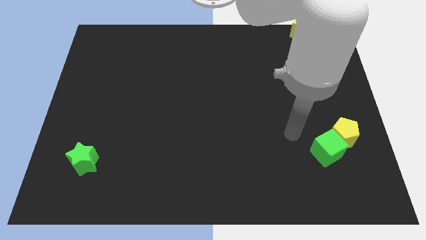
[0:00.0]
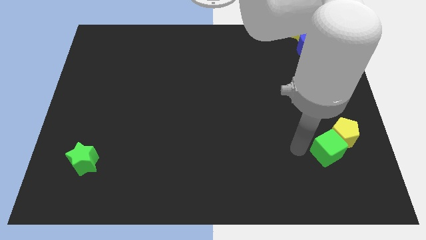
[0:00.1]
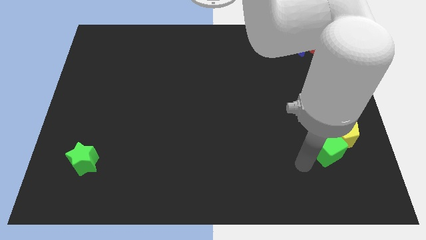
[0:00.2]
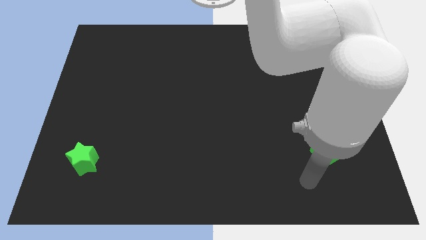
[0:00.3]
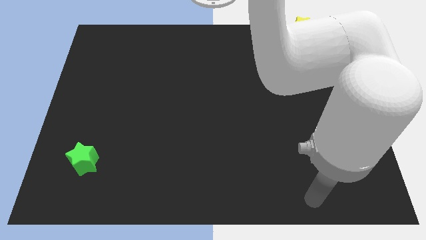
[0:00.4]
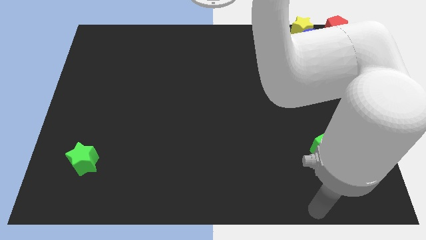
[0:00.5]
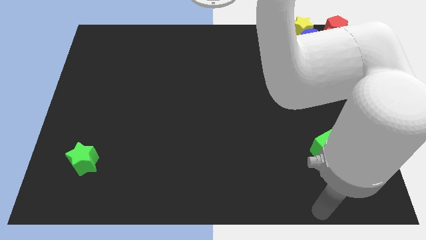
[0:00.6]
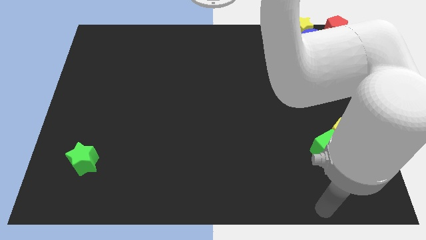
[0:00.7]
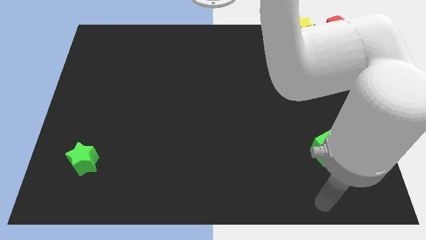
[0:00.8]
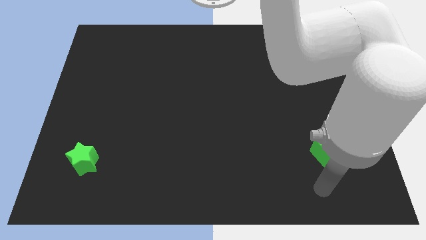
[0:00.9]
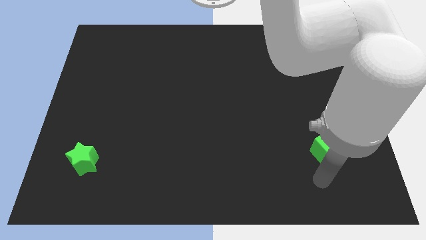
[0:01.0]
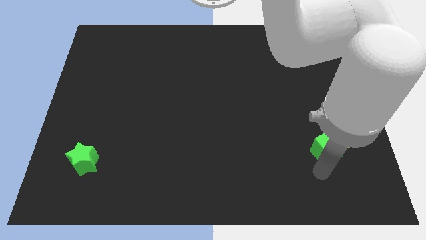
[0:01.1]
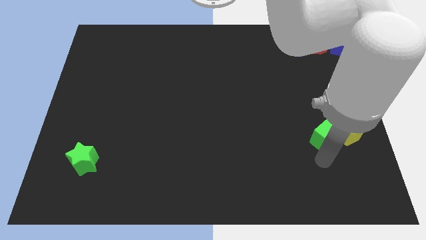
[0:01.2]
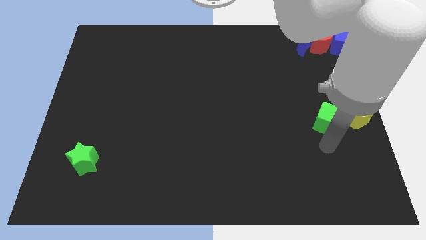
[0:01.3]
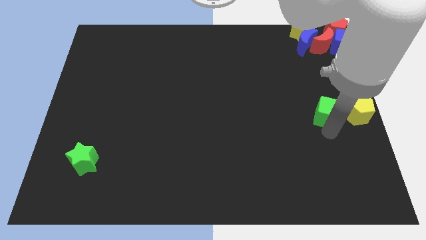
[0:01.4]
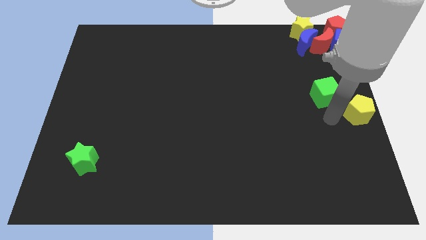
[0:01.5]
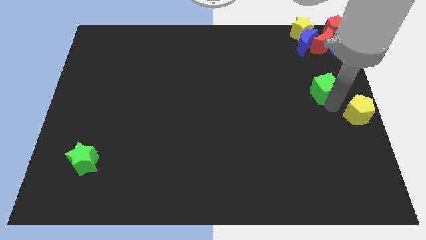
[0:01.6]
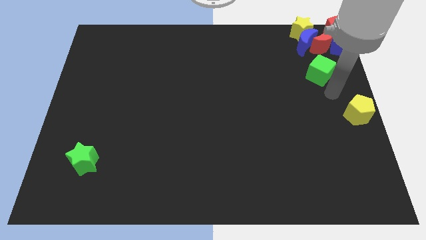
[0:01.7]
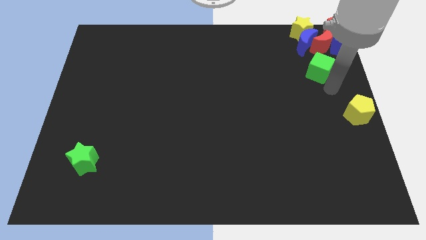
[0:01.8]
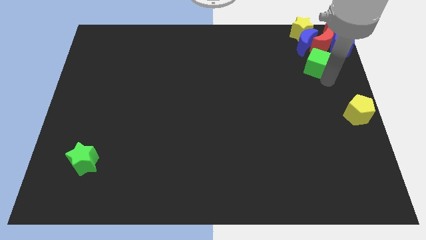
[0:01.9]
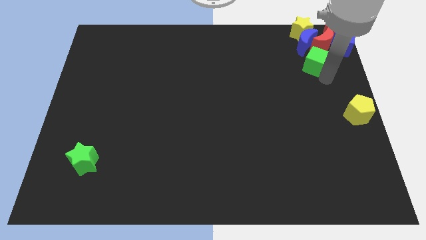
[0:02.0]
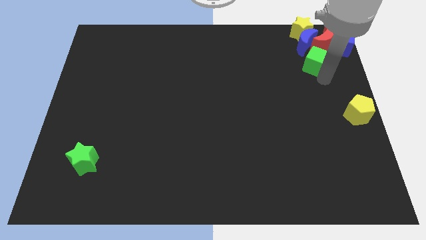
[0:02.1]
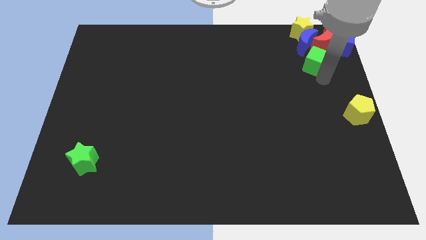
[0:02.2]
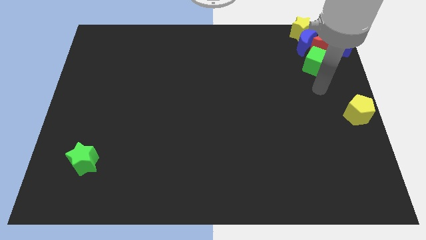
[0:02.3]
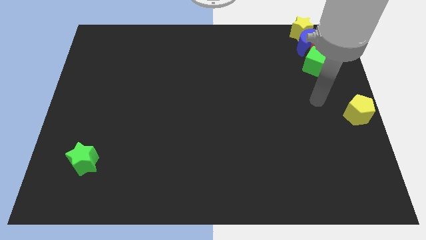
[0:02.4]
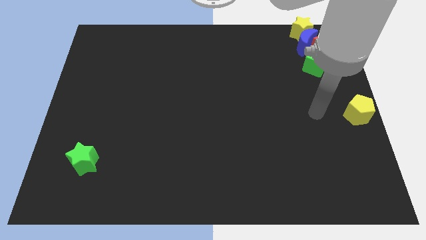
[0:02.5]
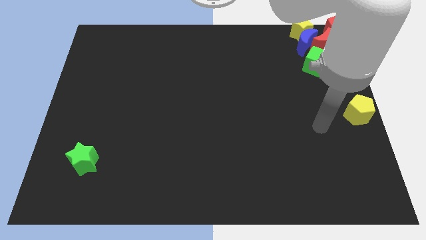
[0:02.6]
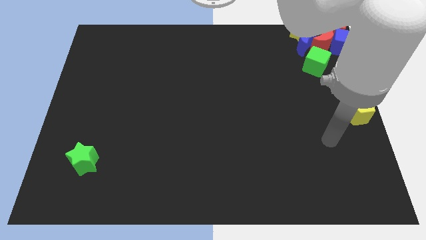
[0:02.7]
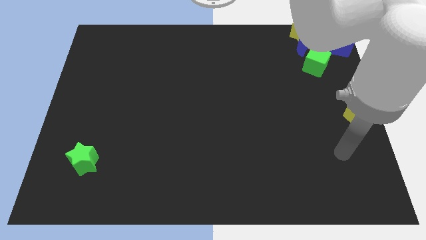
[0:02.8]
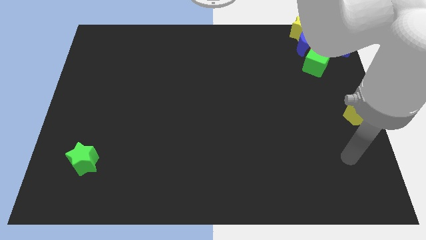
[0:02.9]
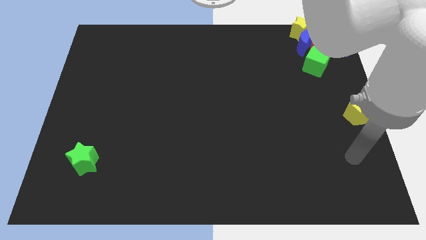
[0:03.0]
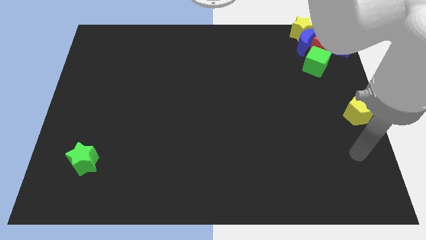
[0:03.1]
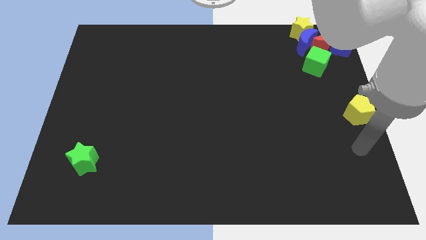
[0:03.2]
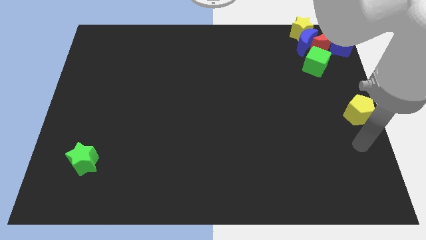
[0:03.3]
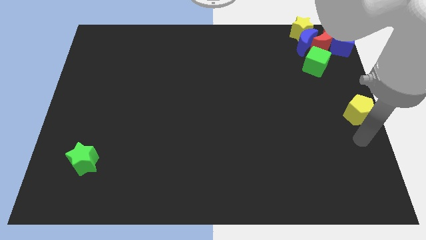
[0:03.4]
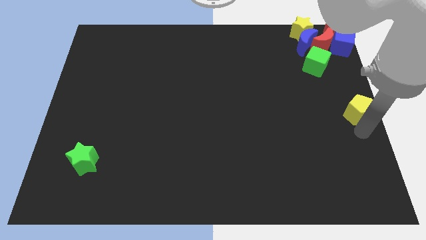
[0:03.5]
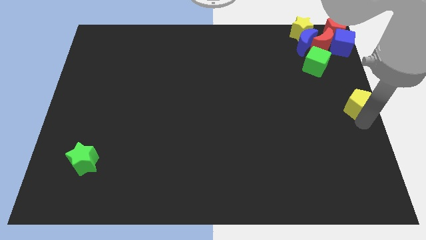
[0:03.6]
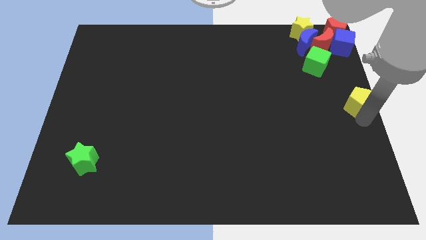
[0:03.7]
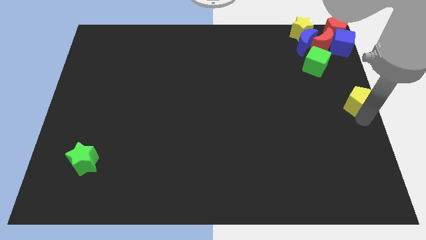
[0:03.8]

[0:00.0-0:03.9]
move green cube into bottom of red crescent

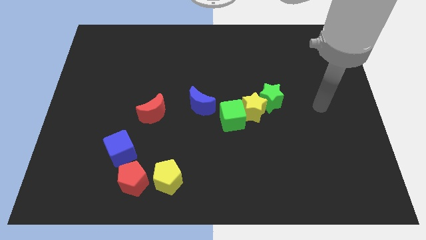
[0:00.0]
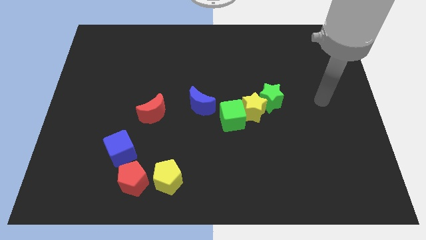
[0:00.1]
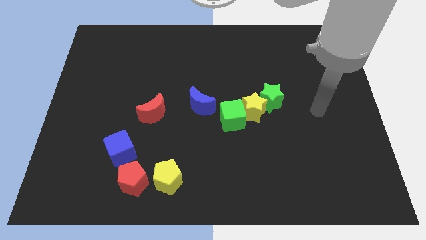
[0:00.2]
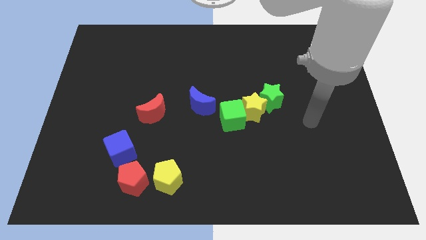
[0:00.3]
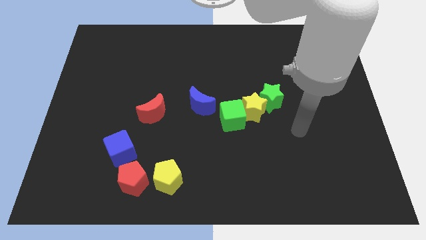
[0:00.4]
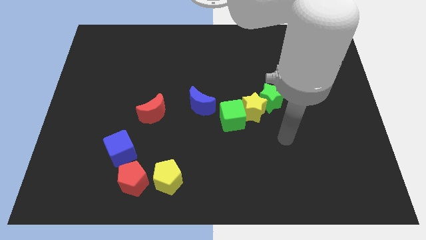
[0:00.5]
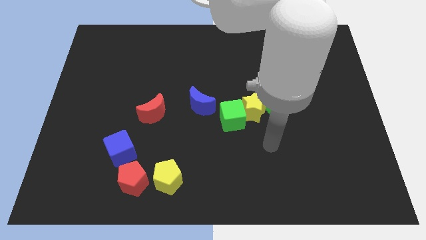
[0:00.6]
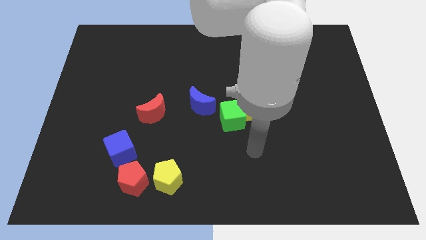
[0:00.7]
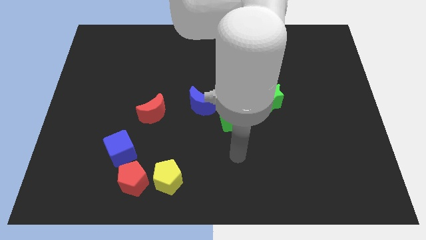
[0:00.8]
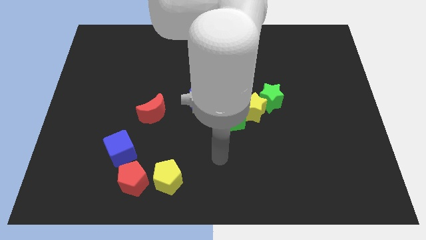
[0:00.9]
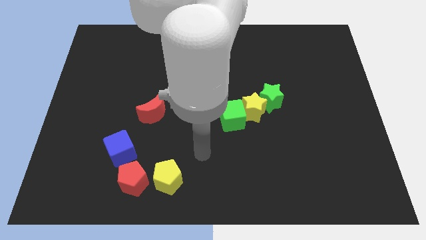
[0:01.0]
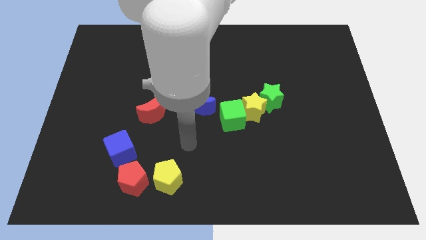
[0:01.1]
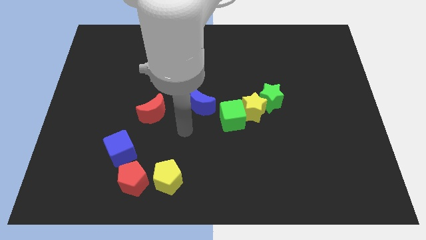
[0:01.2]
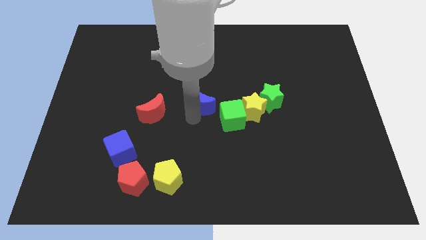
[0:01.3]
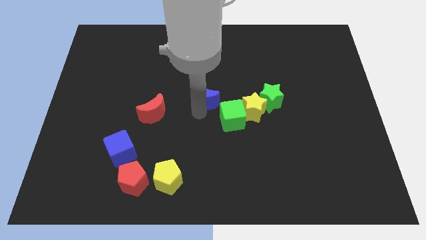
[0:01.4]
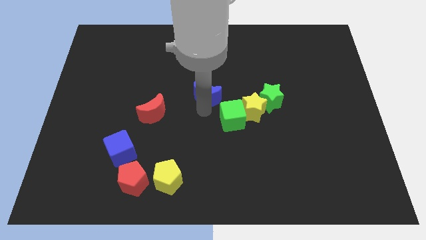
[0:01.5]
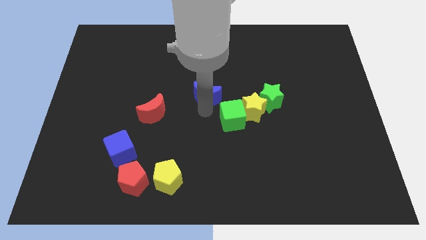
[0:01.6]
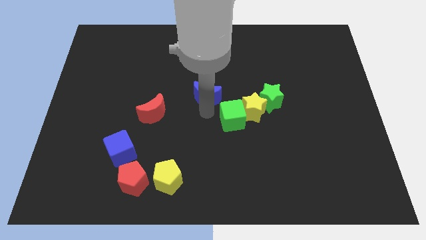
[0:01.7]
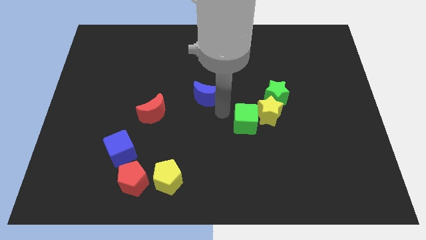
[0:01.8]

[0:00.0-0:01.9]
touch the blue crescent

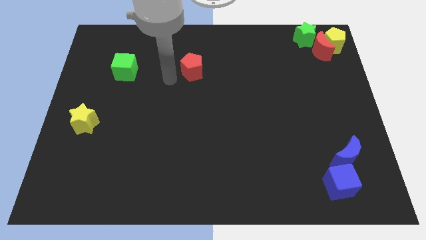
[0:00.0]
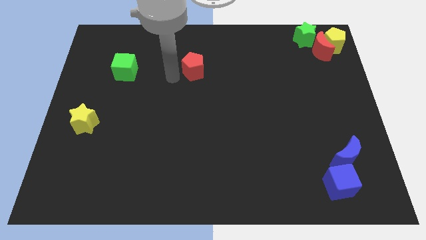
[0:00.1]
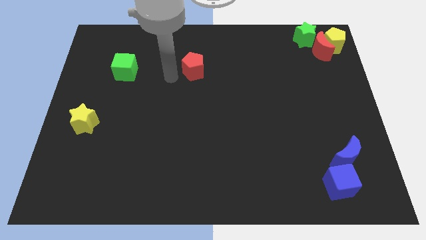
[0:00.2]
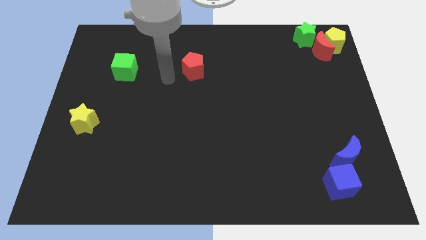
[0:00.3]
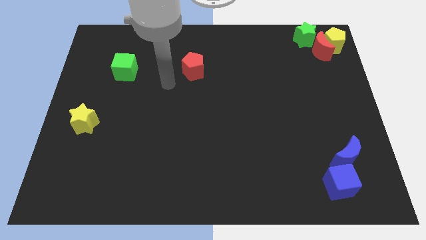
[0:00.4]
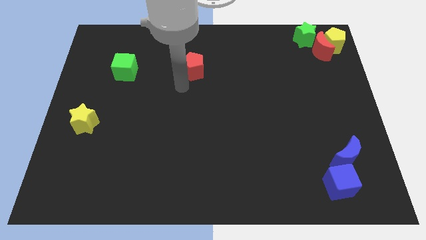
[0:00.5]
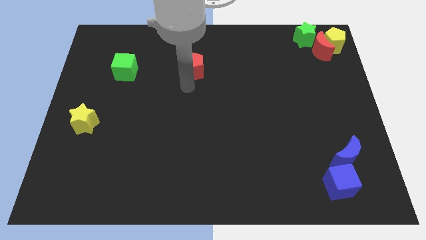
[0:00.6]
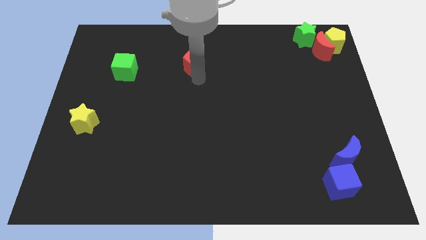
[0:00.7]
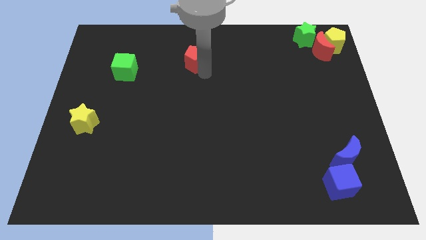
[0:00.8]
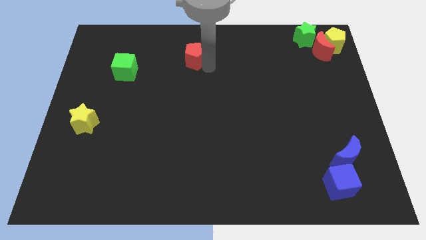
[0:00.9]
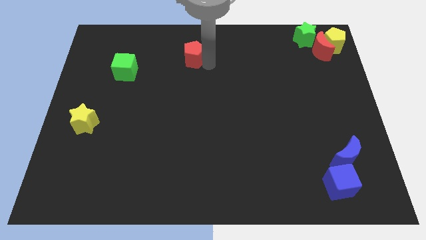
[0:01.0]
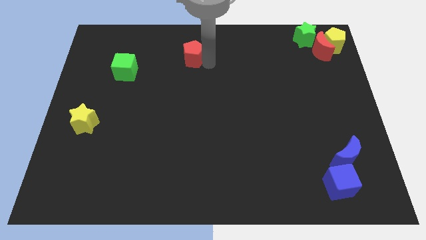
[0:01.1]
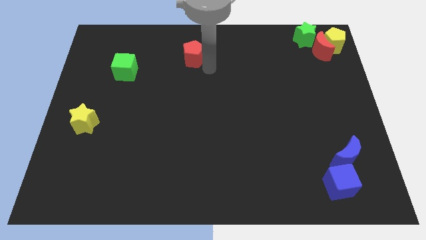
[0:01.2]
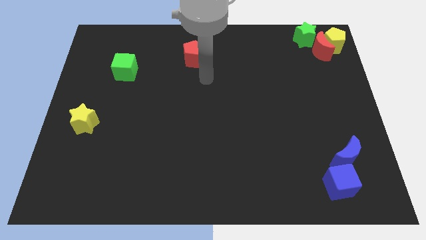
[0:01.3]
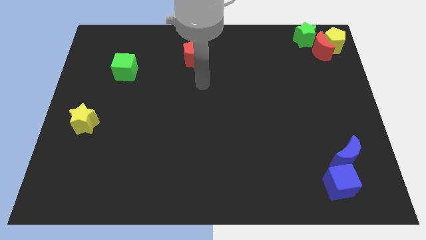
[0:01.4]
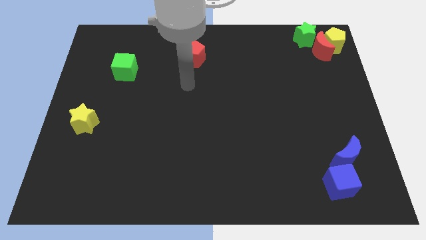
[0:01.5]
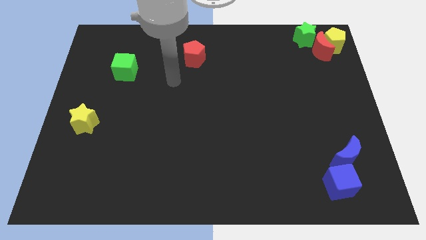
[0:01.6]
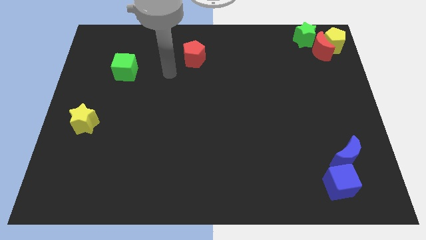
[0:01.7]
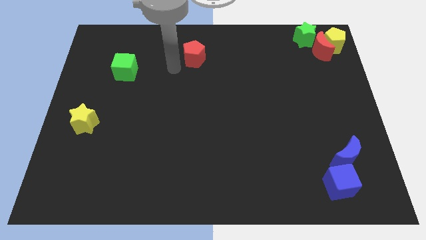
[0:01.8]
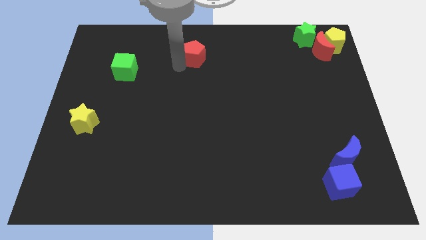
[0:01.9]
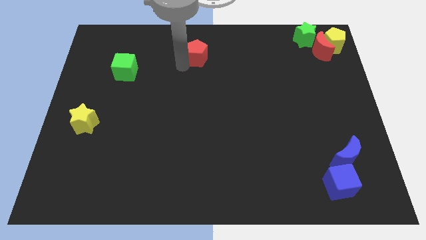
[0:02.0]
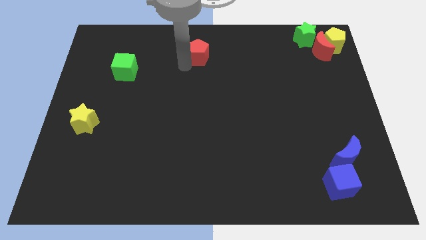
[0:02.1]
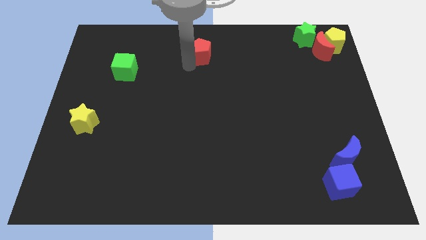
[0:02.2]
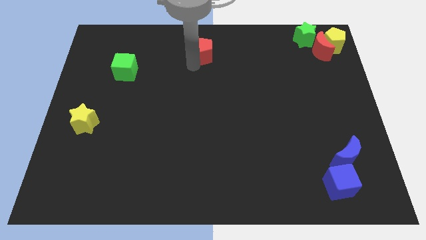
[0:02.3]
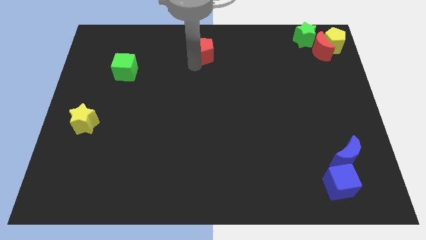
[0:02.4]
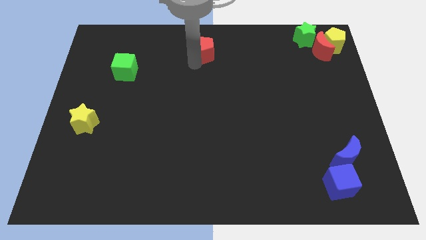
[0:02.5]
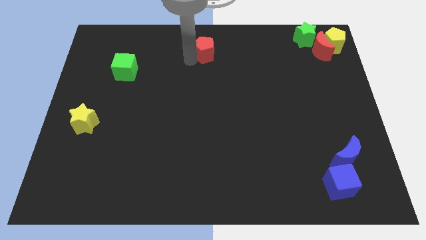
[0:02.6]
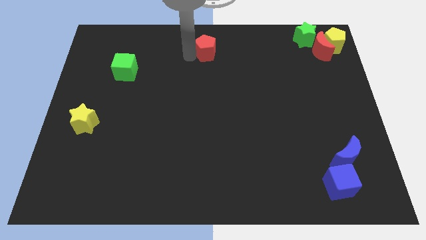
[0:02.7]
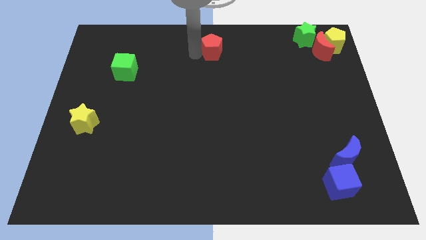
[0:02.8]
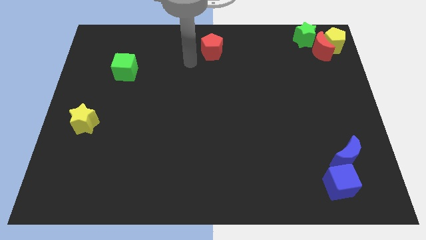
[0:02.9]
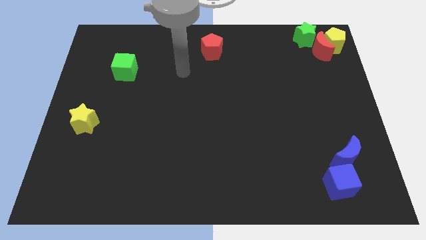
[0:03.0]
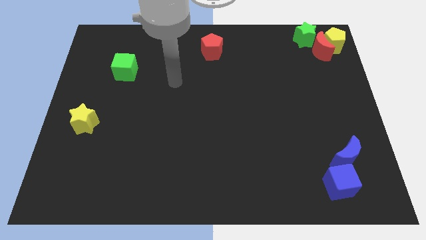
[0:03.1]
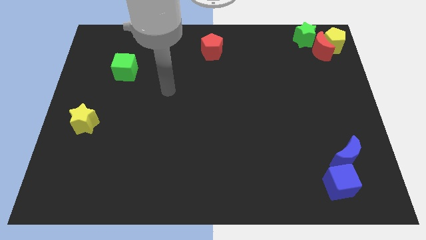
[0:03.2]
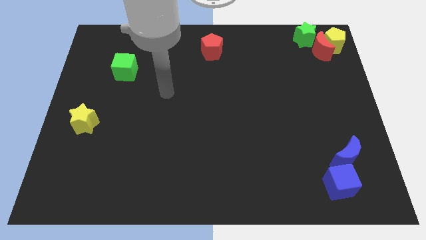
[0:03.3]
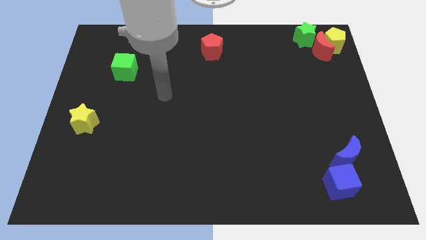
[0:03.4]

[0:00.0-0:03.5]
put the red pentagon to the top center of the board
